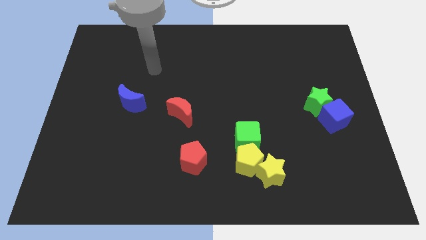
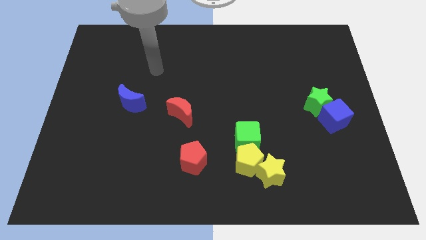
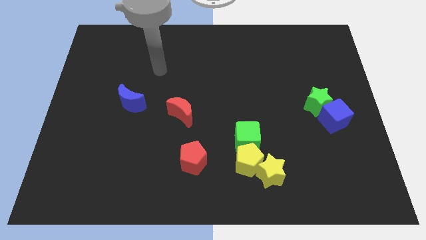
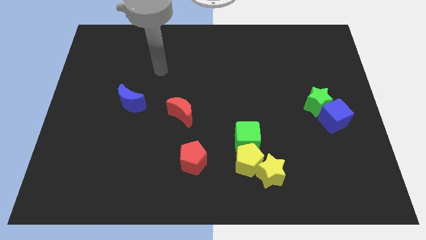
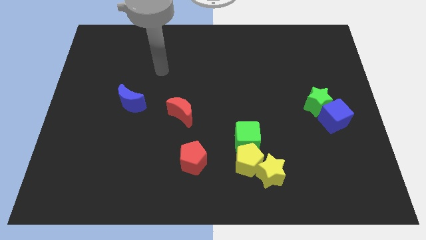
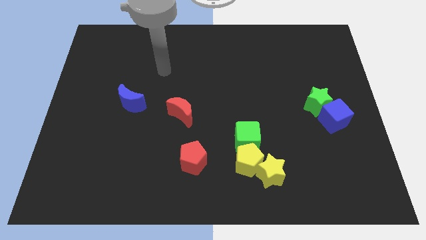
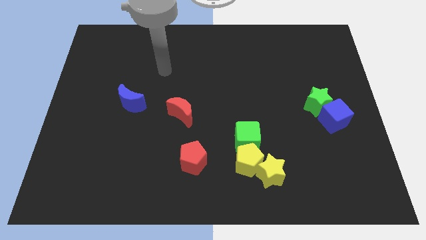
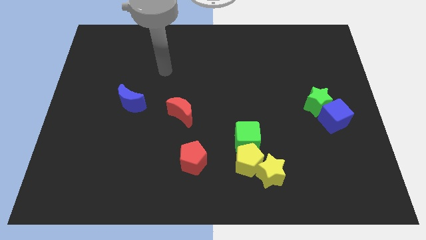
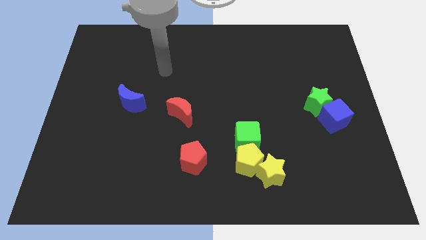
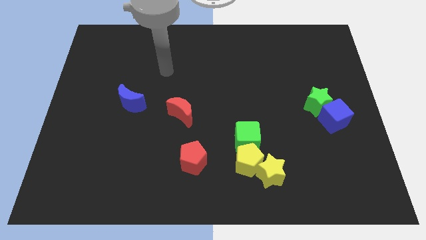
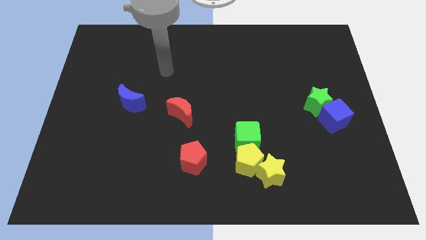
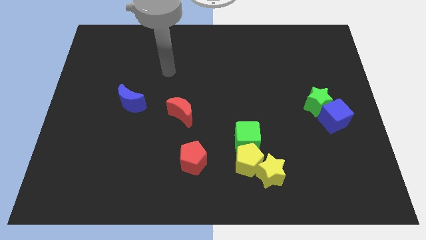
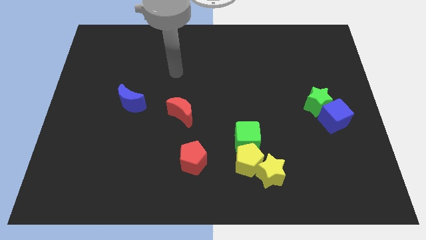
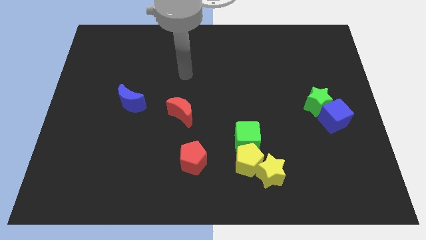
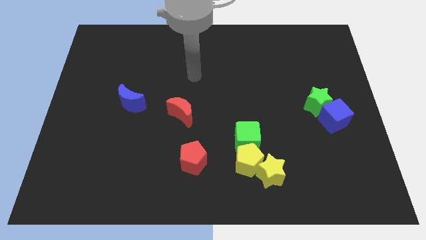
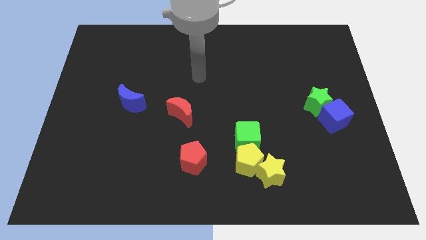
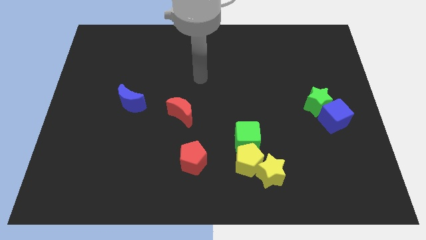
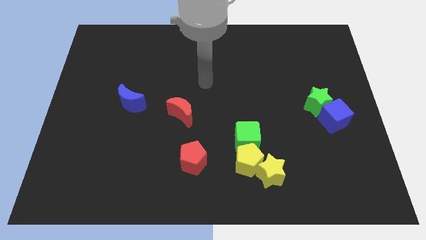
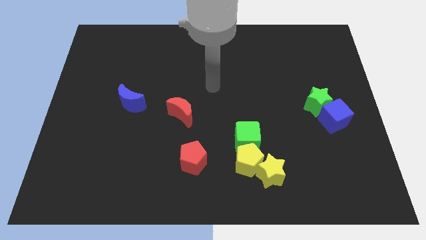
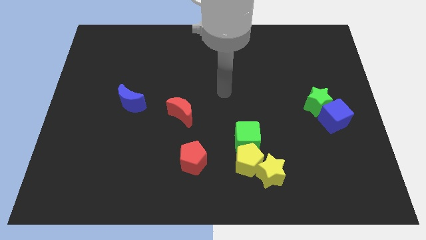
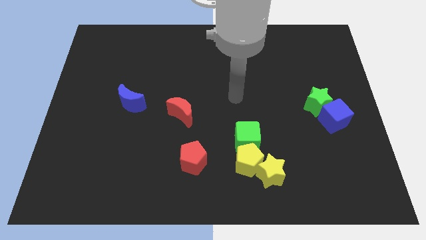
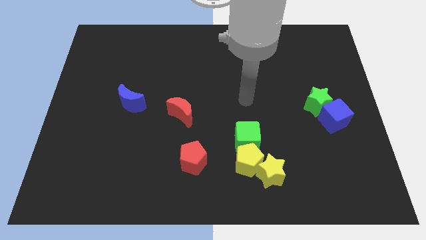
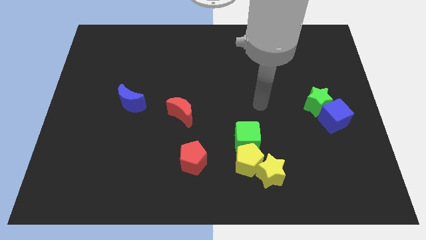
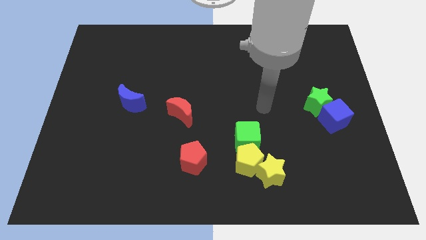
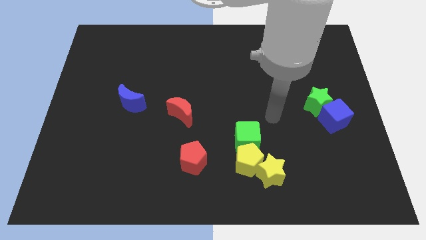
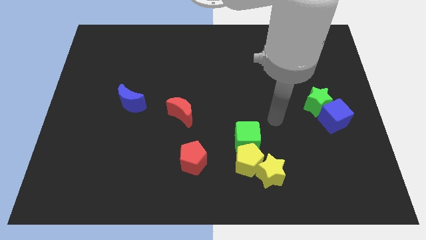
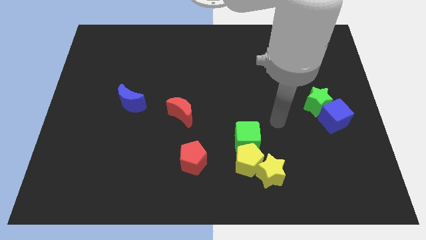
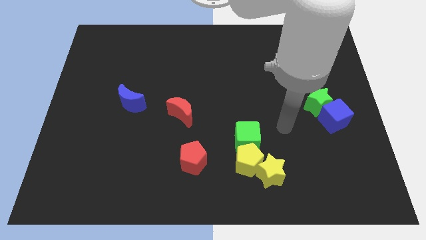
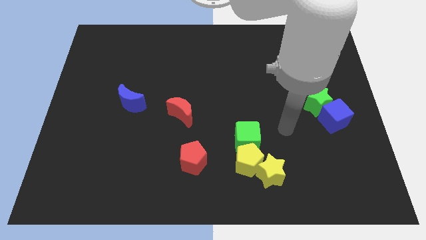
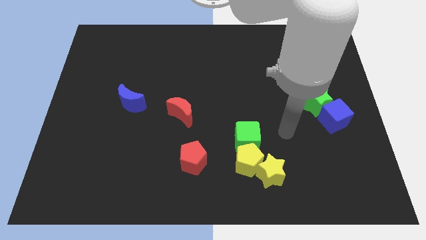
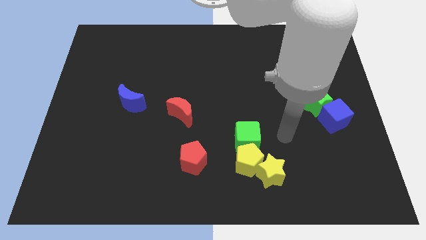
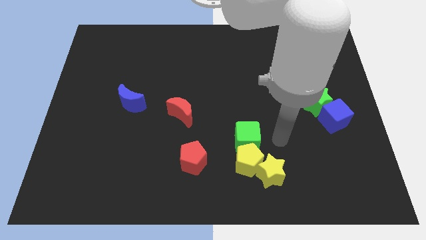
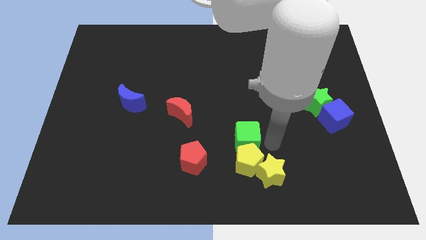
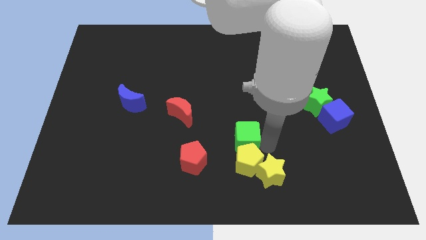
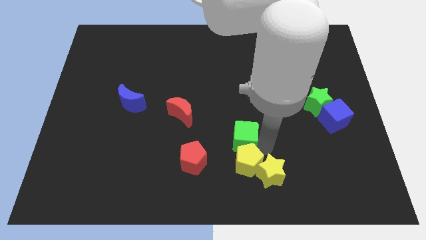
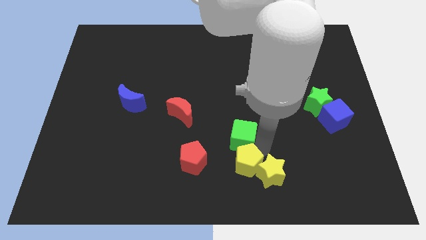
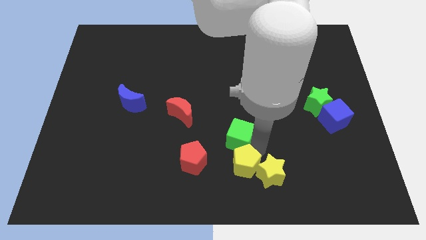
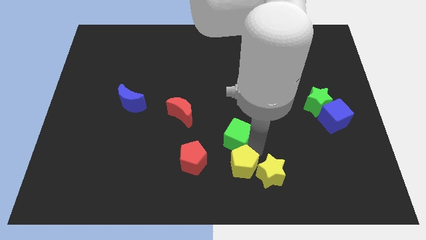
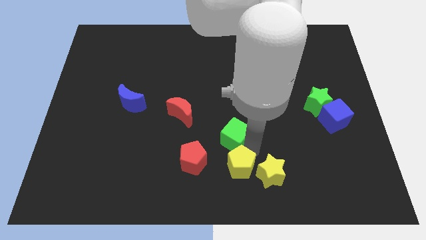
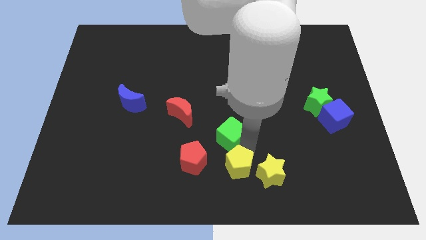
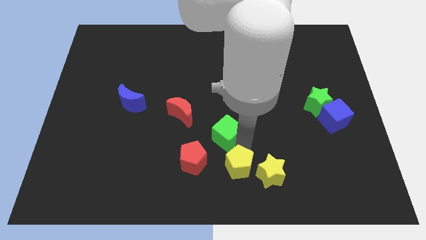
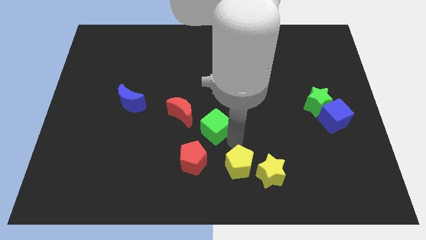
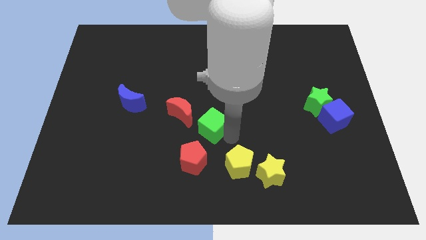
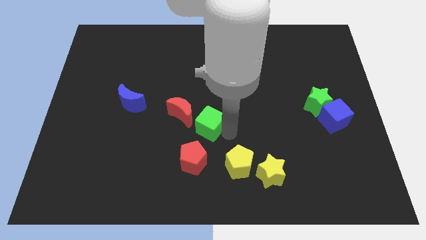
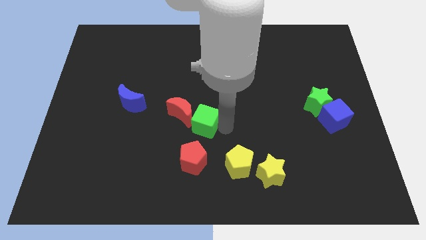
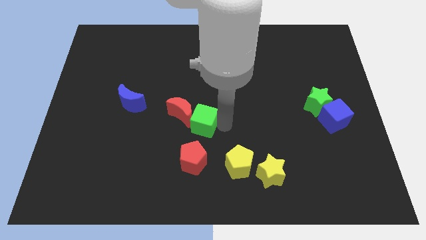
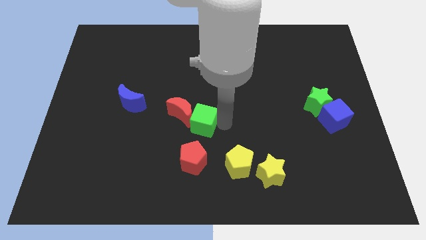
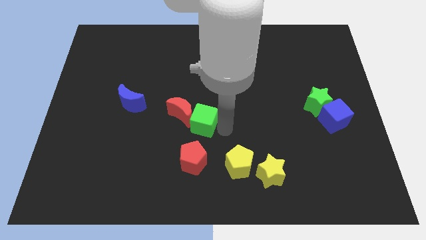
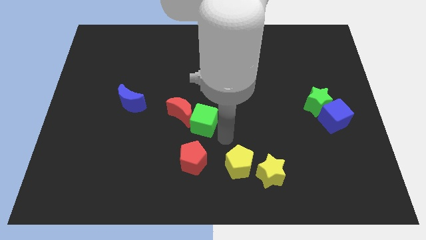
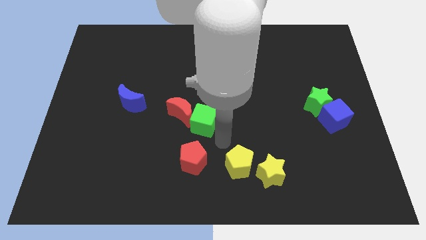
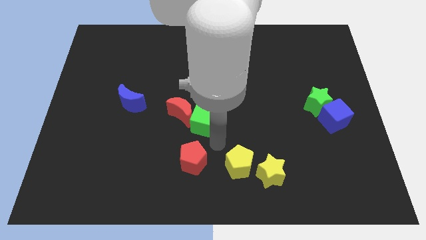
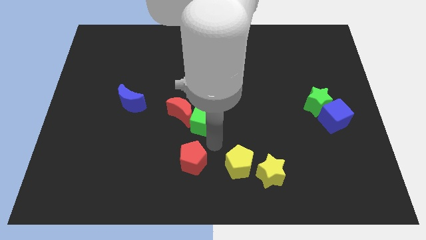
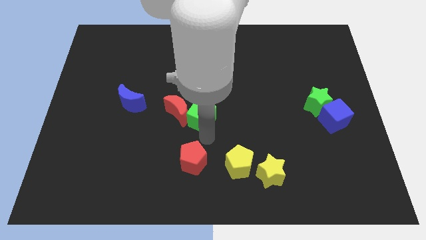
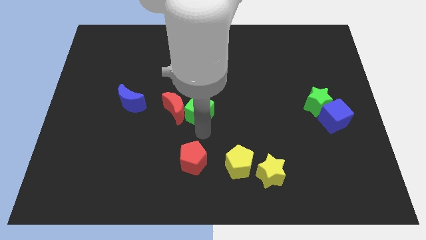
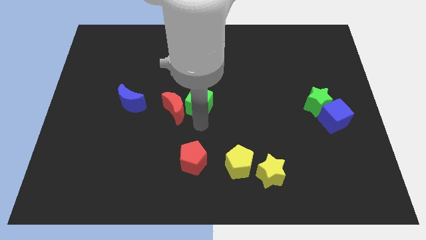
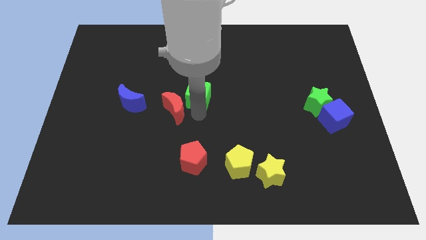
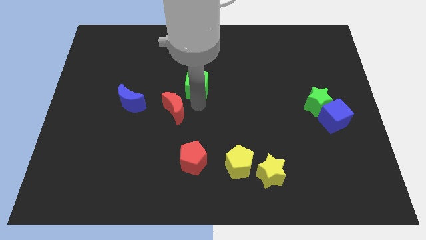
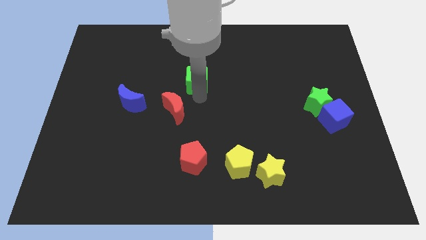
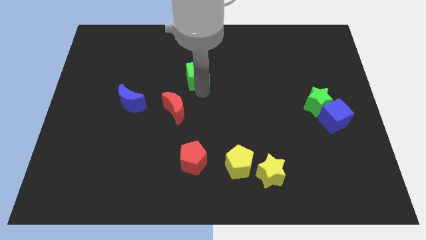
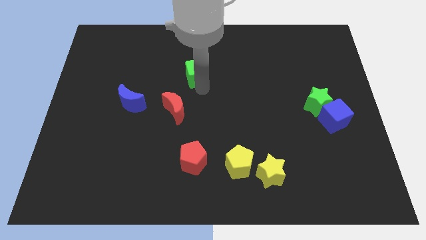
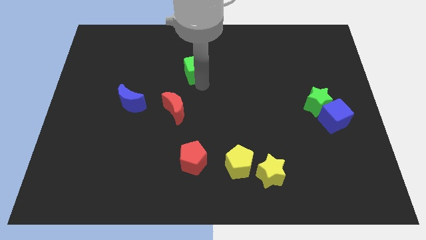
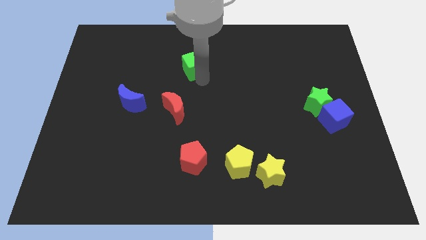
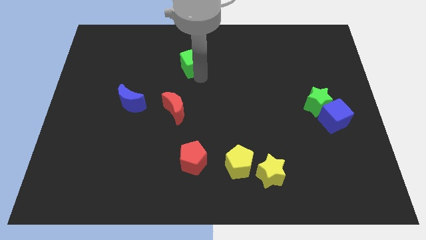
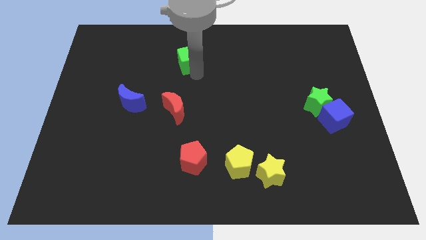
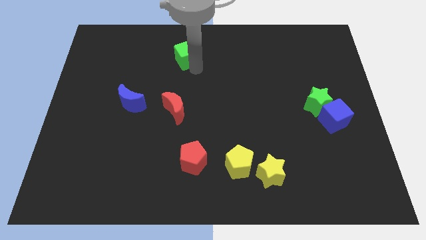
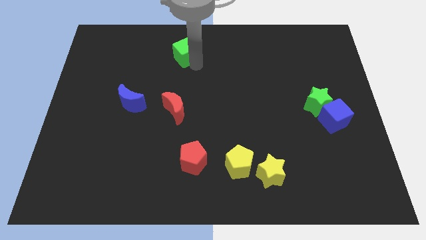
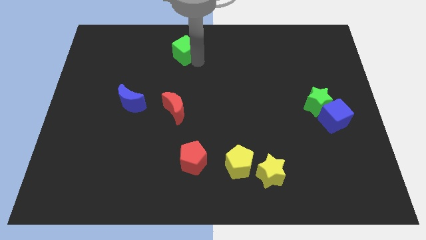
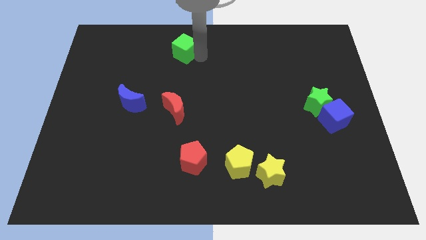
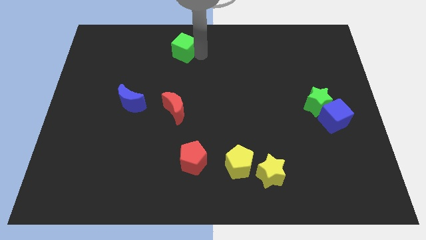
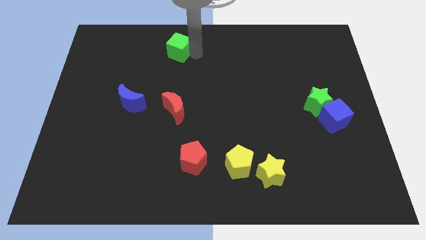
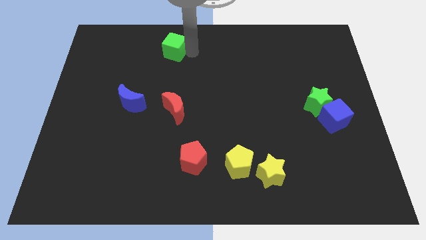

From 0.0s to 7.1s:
place the green cube above the red moon

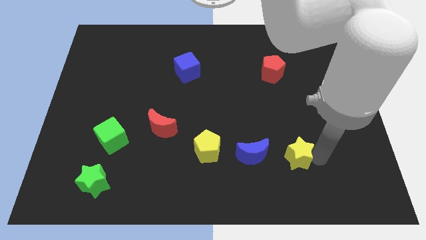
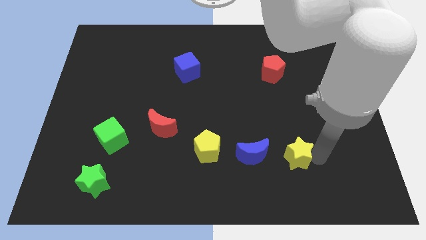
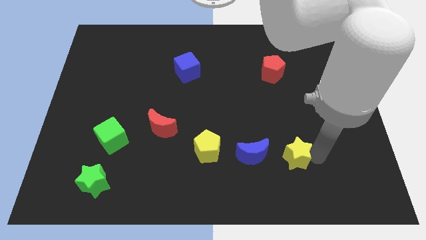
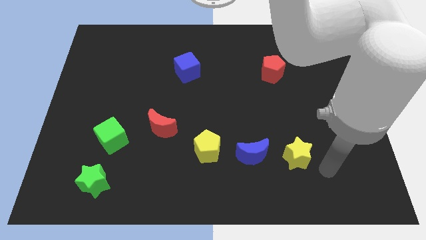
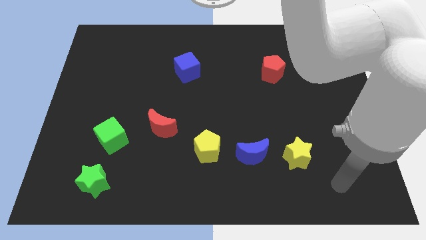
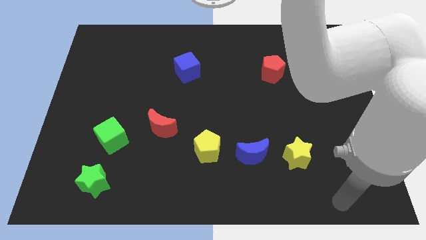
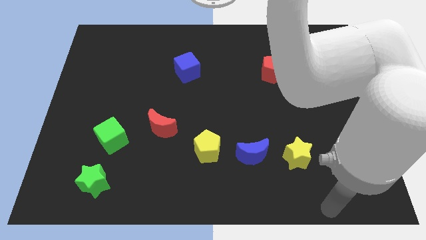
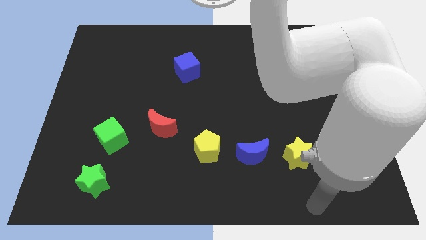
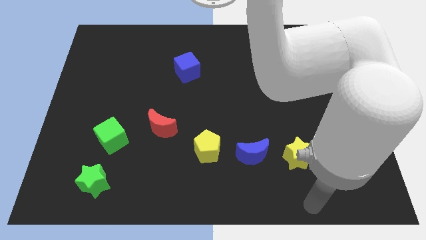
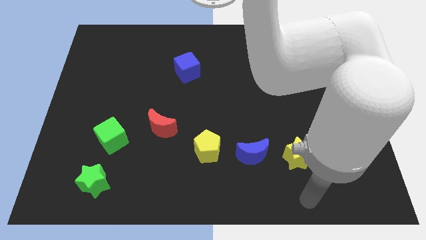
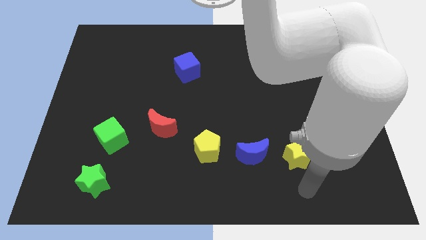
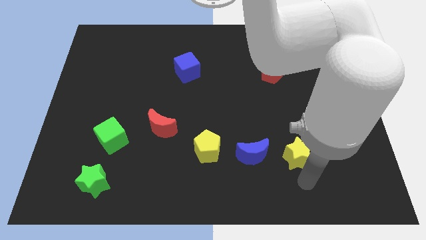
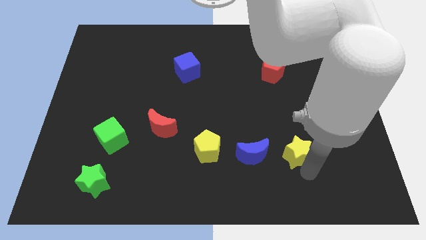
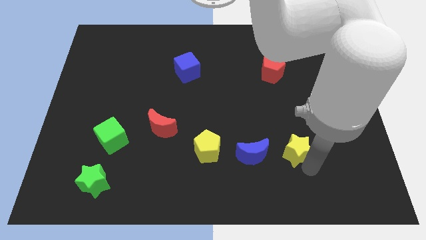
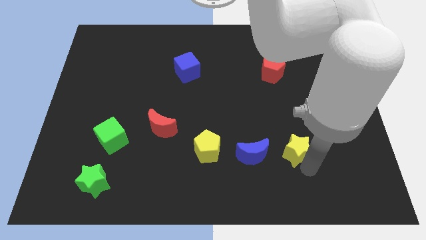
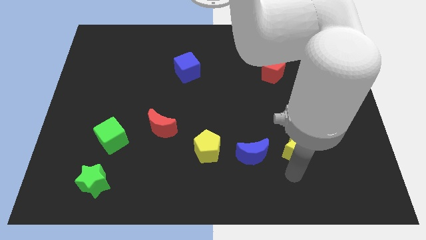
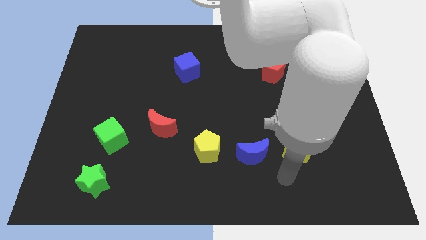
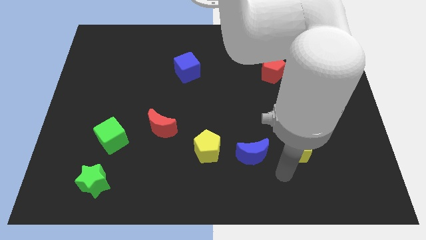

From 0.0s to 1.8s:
move yellow star slightly up

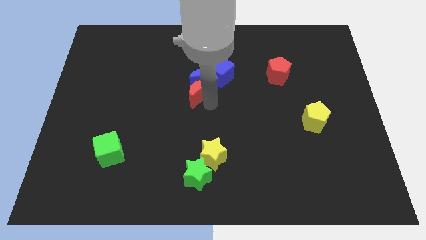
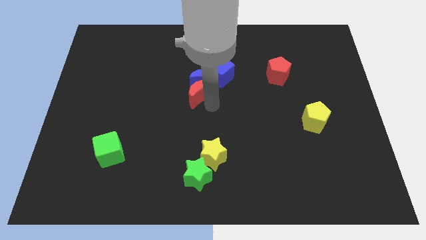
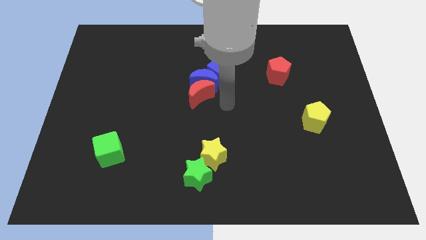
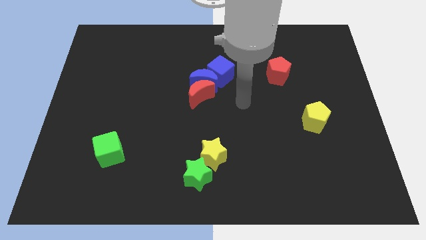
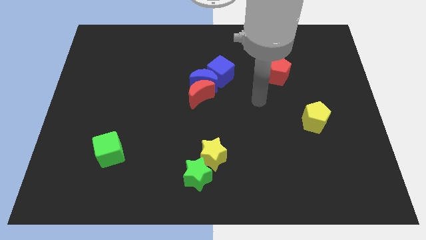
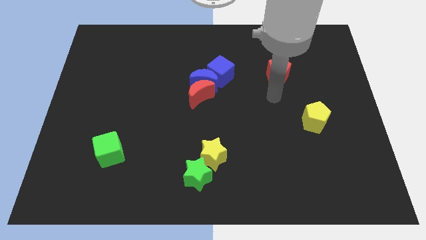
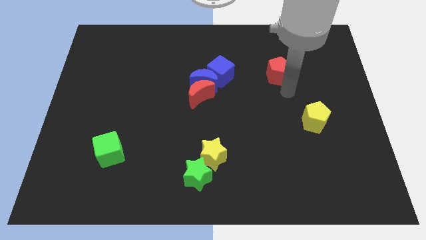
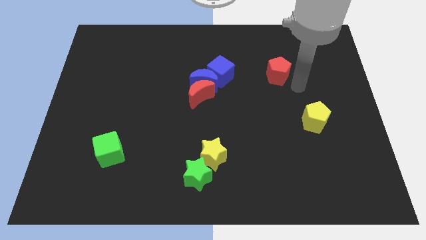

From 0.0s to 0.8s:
place the arm down to the red pentagon
